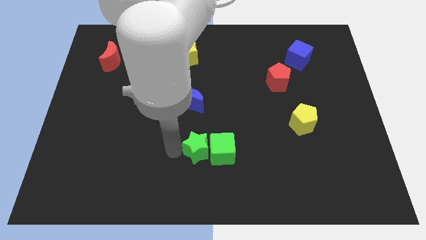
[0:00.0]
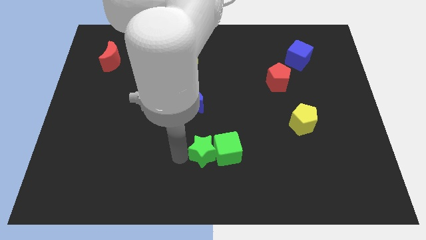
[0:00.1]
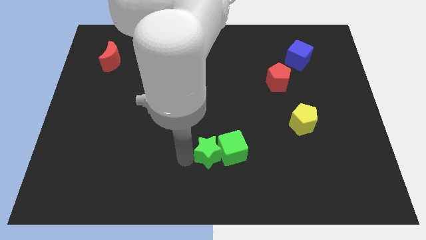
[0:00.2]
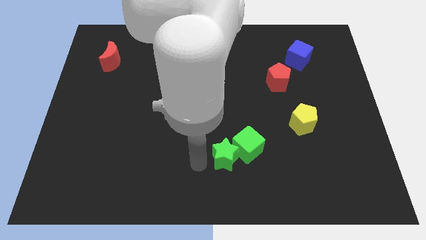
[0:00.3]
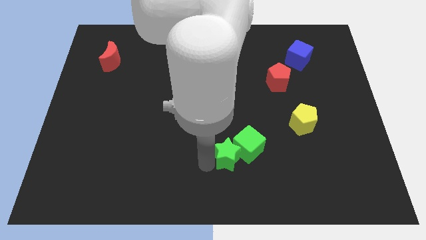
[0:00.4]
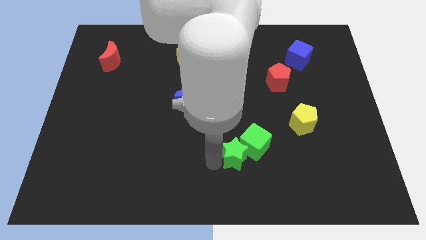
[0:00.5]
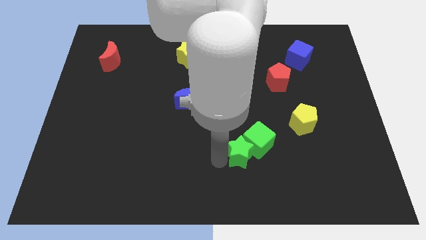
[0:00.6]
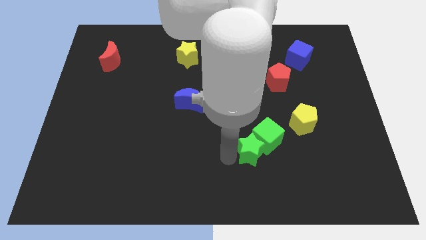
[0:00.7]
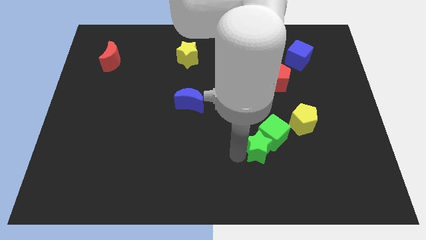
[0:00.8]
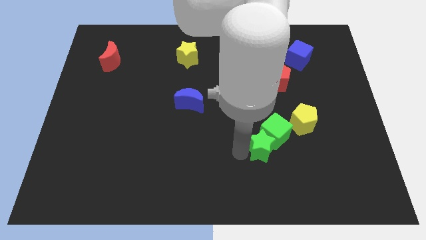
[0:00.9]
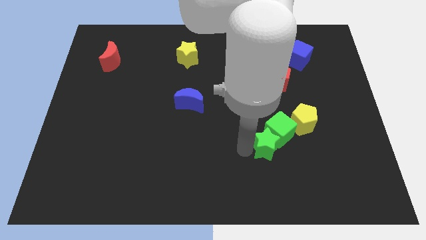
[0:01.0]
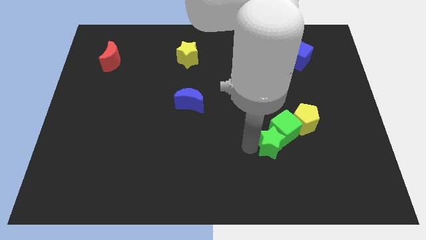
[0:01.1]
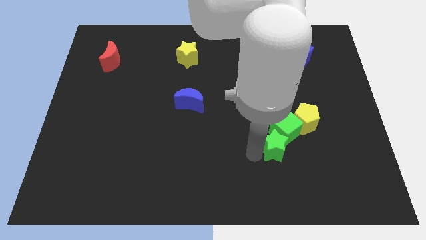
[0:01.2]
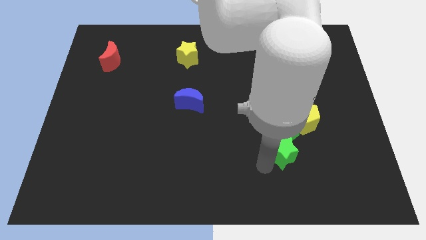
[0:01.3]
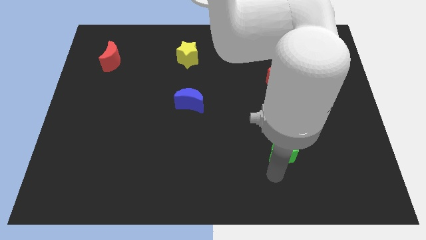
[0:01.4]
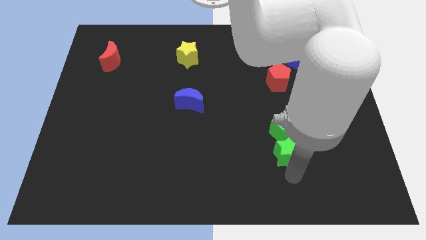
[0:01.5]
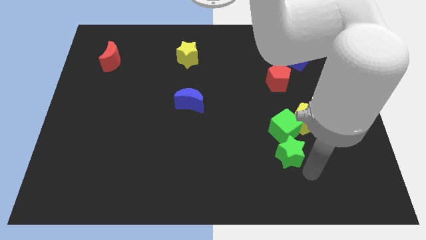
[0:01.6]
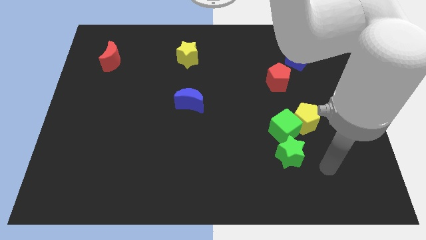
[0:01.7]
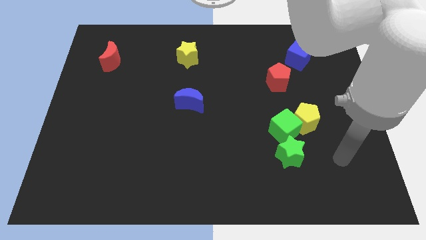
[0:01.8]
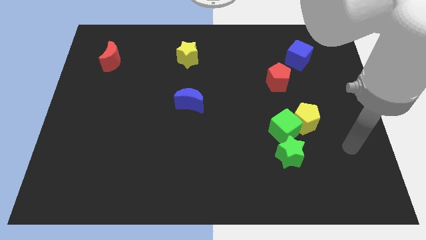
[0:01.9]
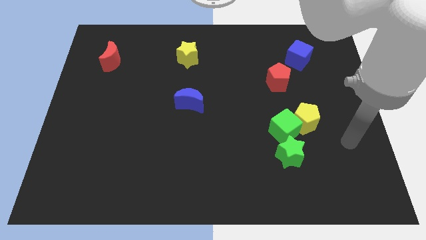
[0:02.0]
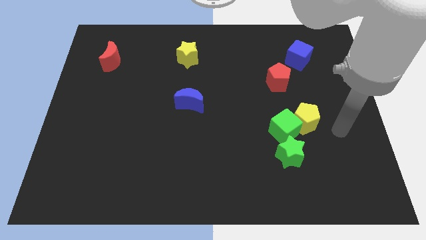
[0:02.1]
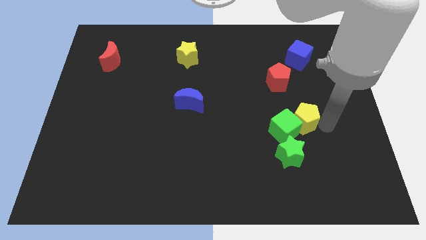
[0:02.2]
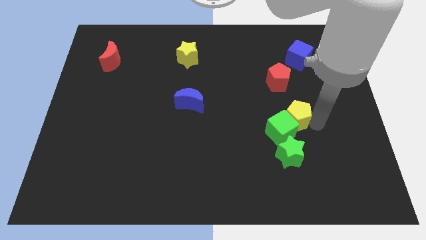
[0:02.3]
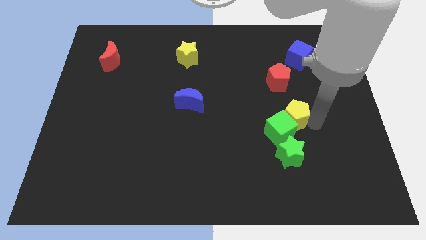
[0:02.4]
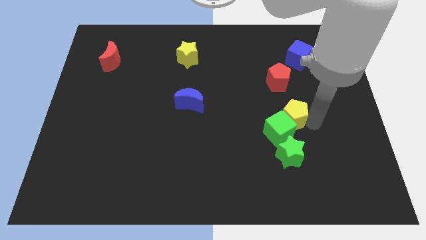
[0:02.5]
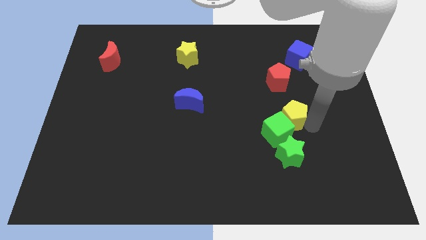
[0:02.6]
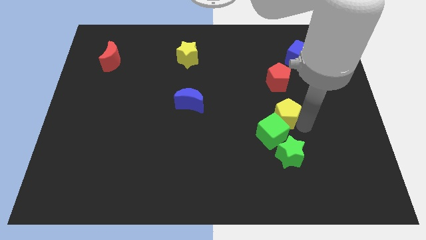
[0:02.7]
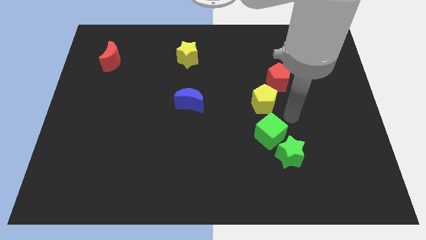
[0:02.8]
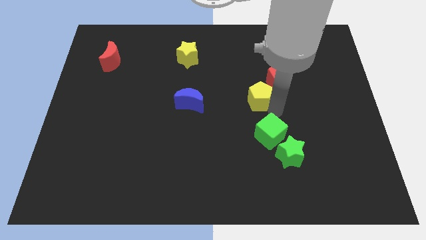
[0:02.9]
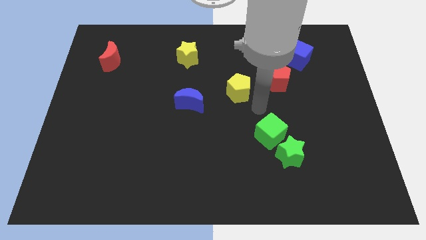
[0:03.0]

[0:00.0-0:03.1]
push the green cube with the green star to the yellow pentagon

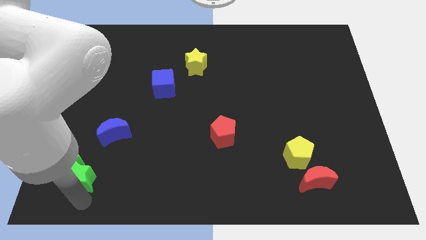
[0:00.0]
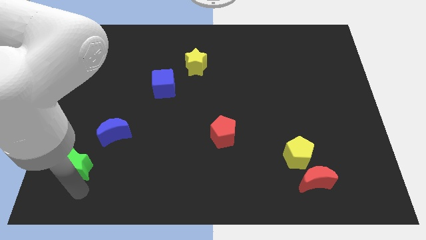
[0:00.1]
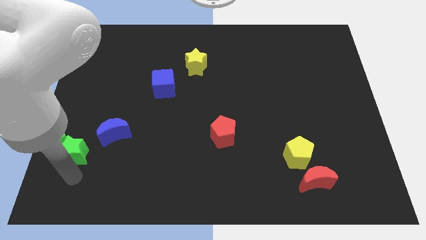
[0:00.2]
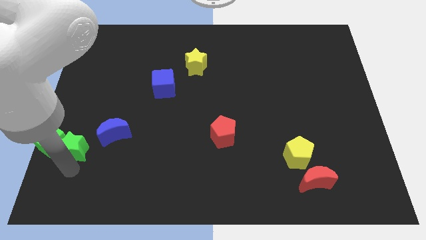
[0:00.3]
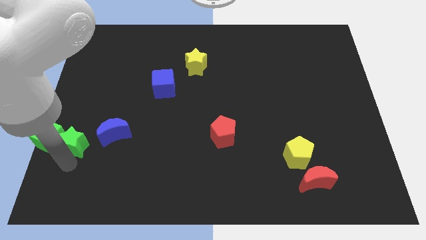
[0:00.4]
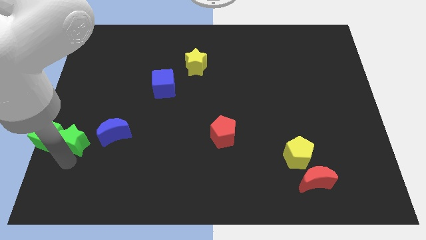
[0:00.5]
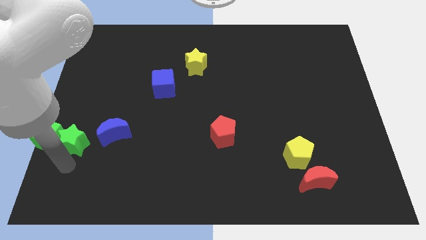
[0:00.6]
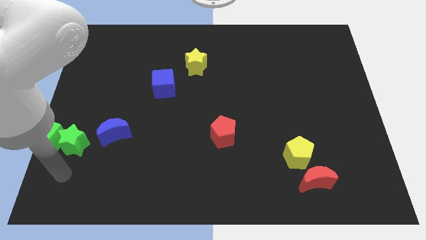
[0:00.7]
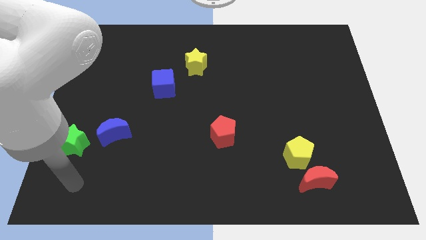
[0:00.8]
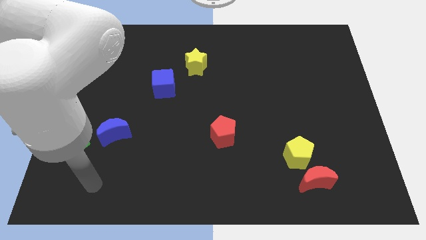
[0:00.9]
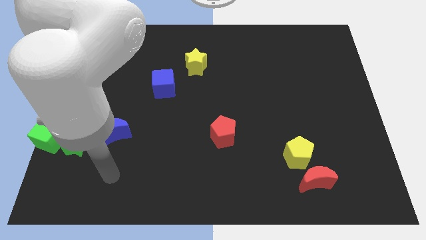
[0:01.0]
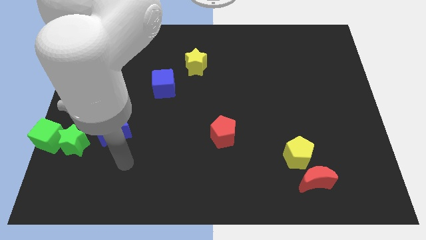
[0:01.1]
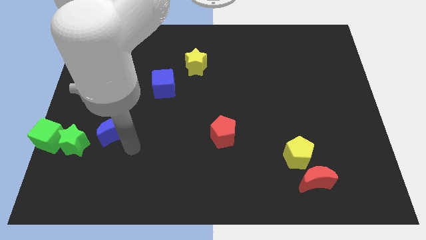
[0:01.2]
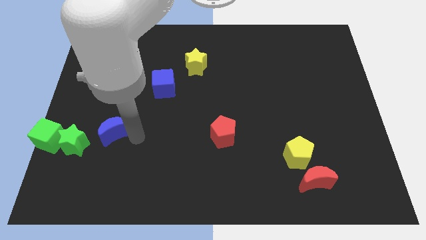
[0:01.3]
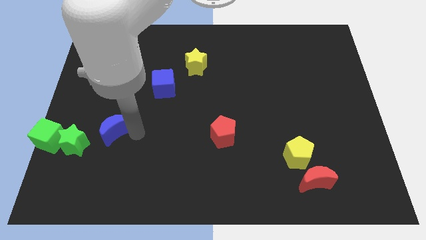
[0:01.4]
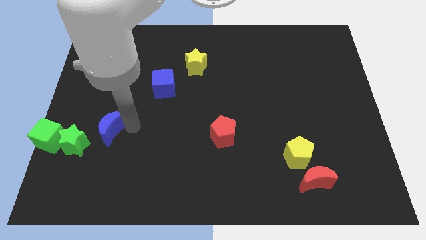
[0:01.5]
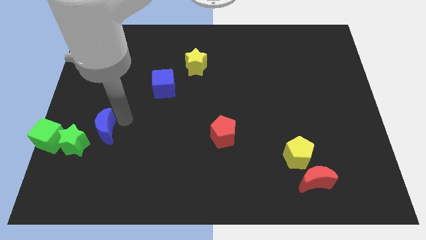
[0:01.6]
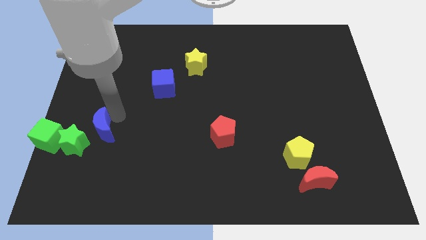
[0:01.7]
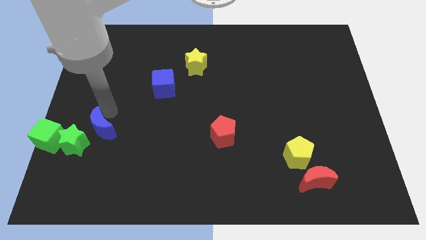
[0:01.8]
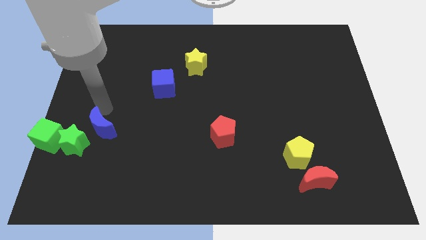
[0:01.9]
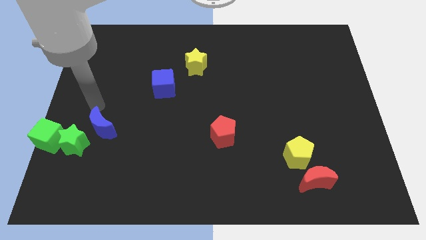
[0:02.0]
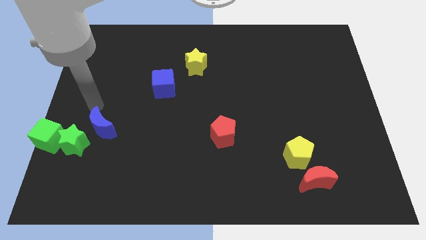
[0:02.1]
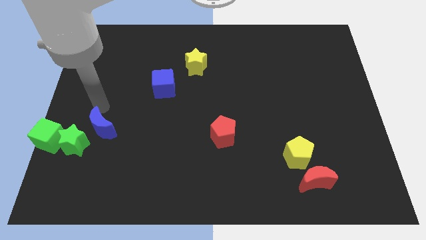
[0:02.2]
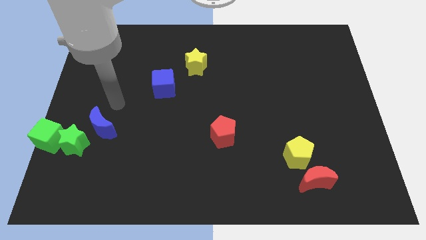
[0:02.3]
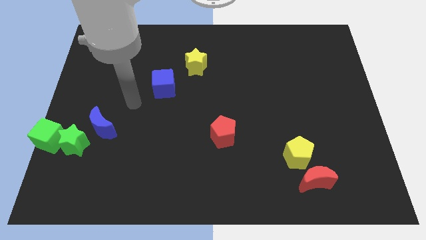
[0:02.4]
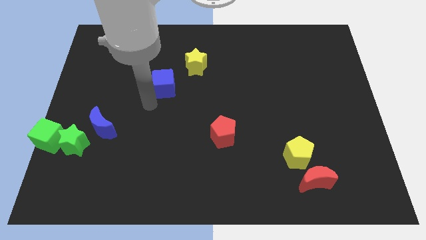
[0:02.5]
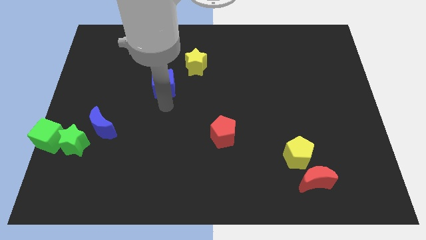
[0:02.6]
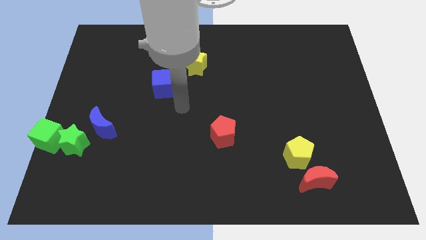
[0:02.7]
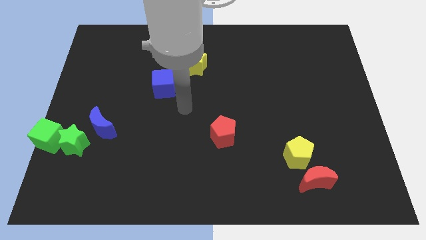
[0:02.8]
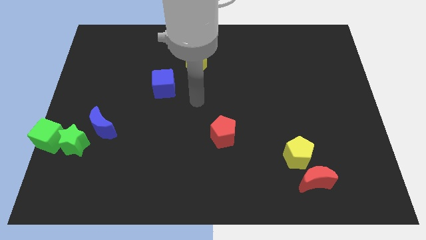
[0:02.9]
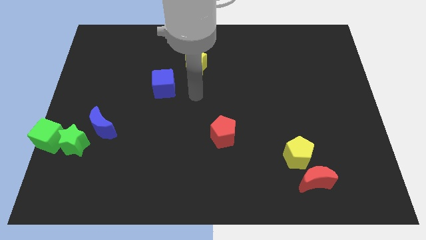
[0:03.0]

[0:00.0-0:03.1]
move blue cube slightly upwards

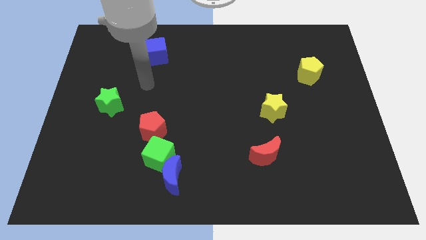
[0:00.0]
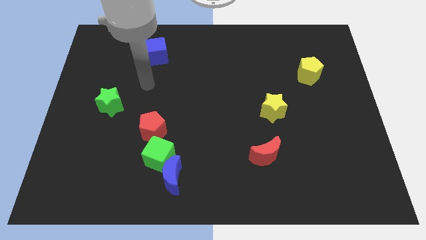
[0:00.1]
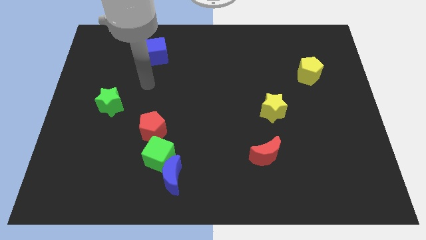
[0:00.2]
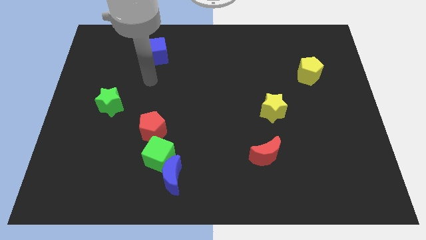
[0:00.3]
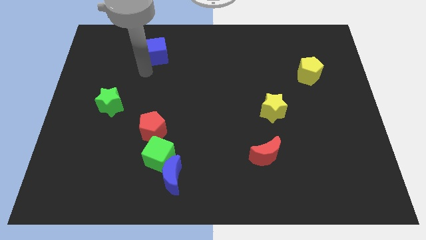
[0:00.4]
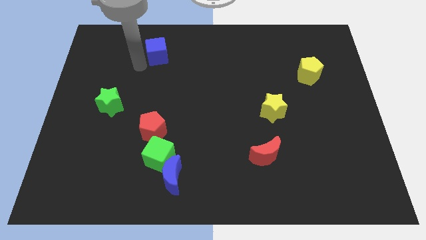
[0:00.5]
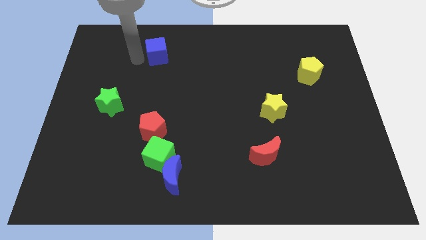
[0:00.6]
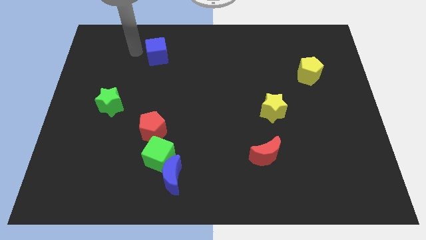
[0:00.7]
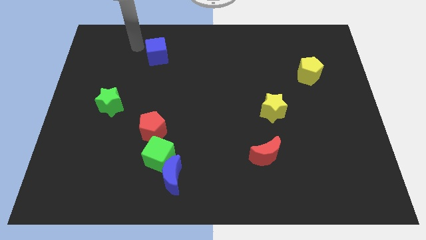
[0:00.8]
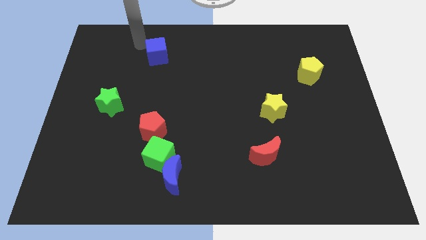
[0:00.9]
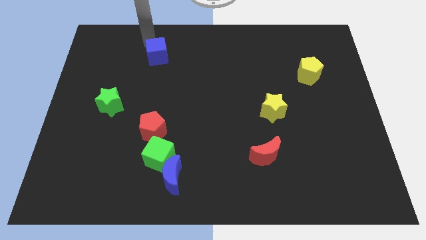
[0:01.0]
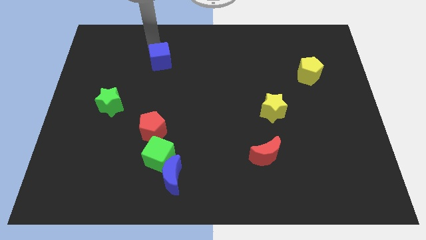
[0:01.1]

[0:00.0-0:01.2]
point your arm above blue cube

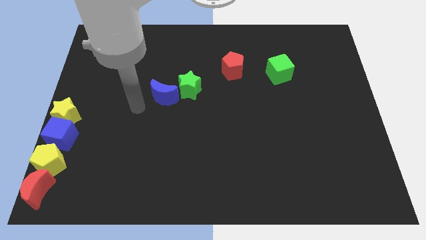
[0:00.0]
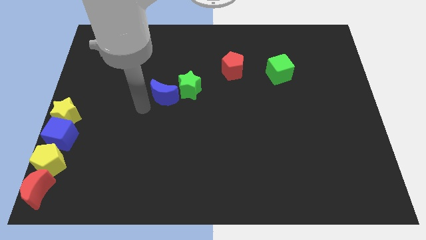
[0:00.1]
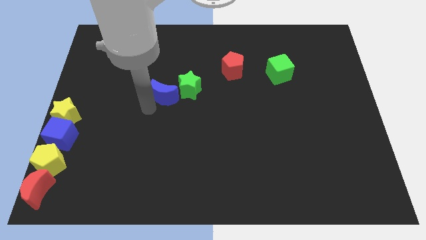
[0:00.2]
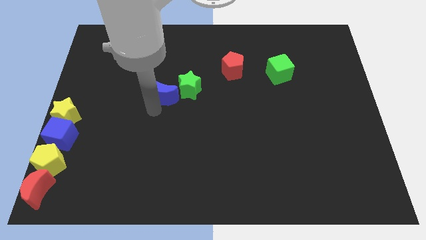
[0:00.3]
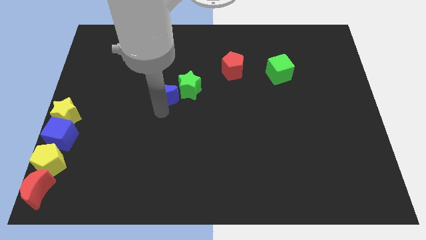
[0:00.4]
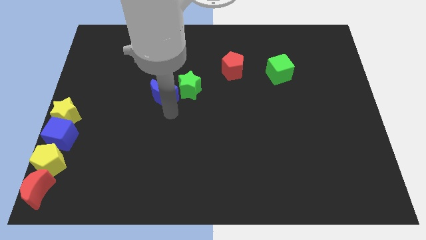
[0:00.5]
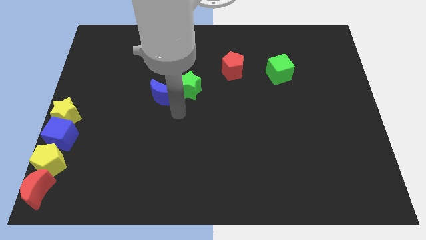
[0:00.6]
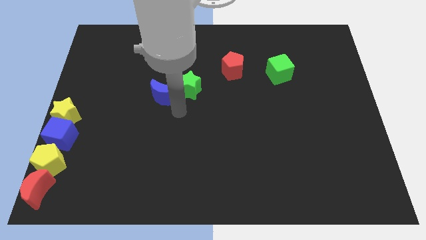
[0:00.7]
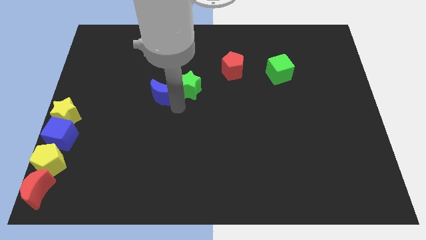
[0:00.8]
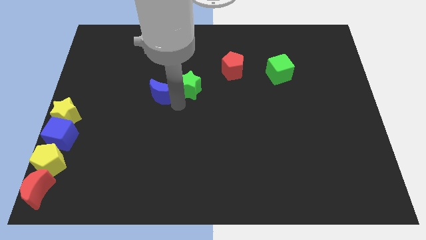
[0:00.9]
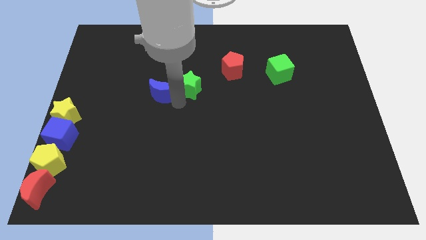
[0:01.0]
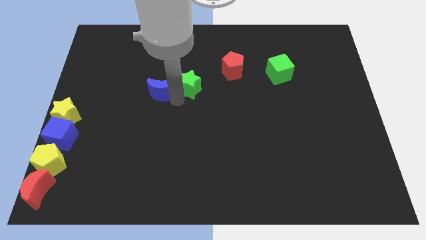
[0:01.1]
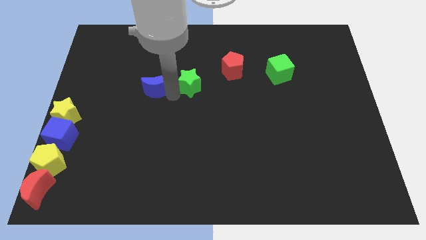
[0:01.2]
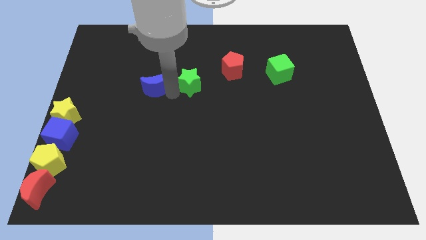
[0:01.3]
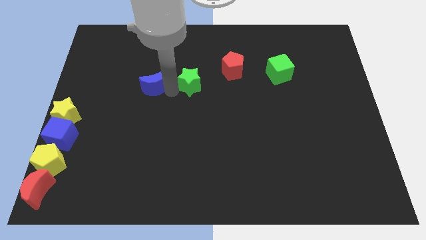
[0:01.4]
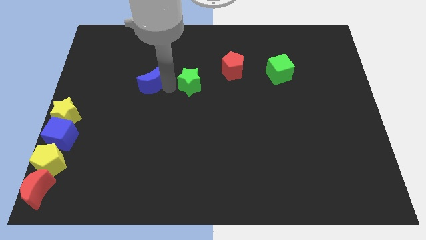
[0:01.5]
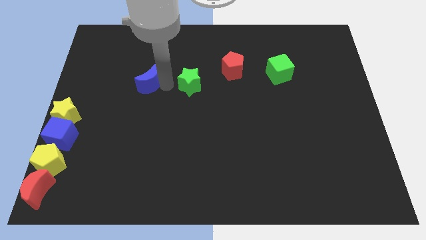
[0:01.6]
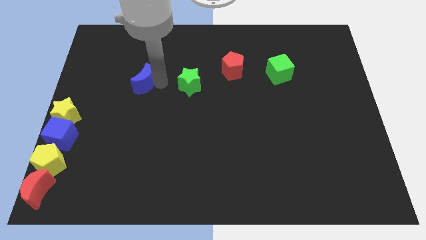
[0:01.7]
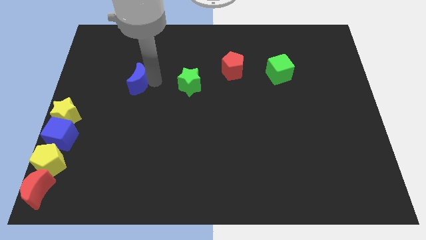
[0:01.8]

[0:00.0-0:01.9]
separate the blue moon and yellow star at the center of board
